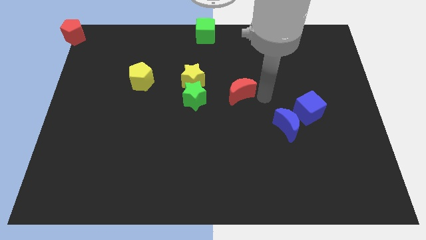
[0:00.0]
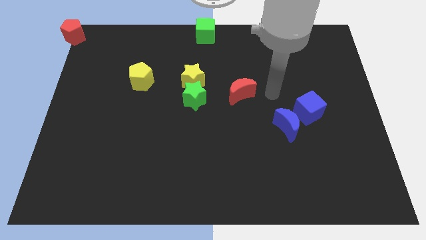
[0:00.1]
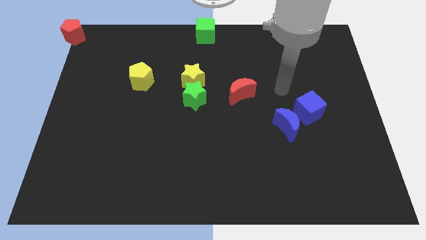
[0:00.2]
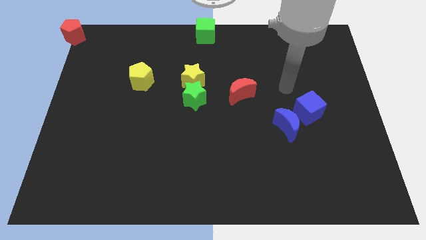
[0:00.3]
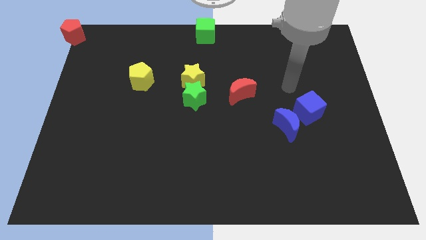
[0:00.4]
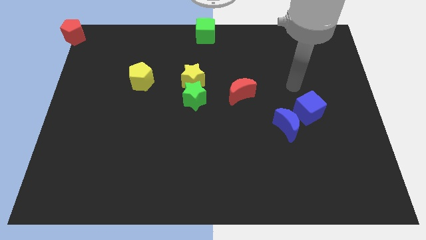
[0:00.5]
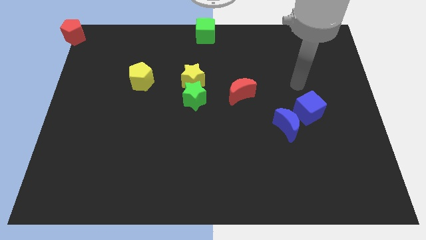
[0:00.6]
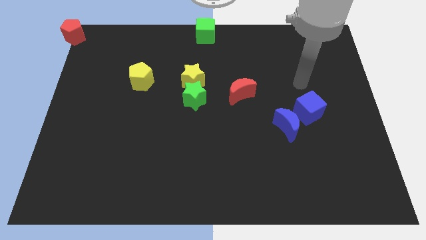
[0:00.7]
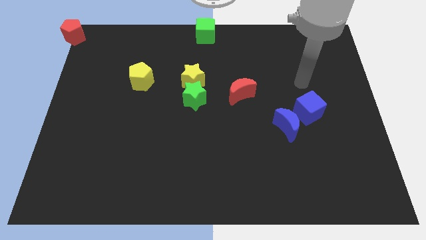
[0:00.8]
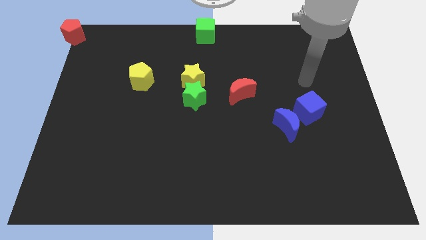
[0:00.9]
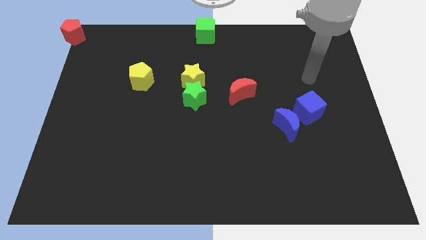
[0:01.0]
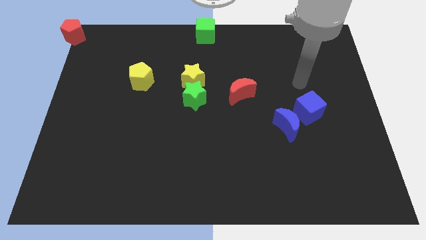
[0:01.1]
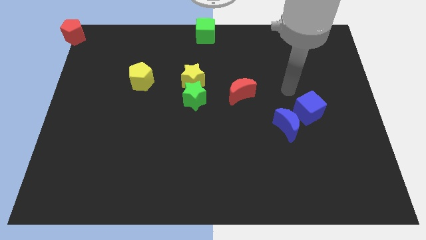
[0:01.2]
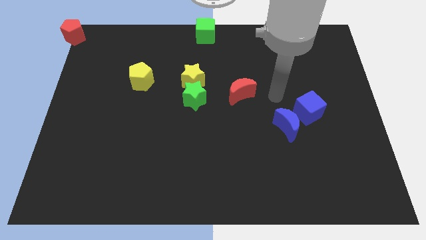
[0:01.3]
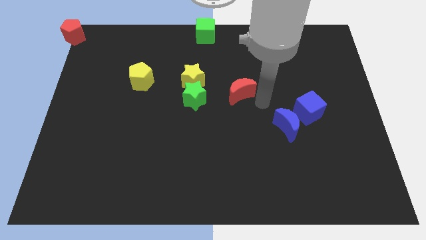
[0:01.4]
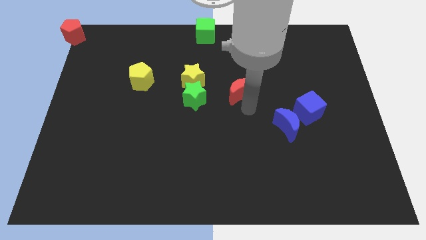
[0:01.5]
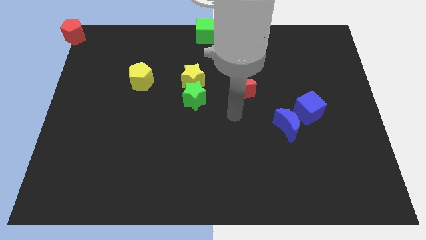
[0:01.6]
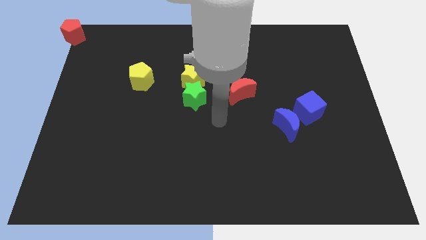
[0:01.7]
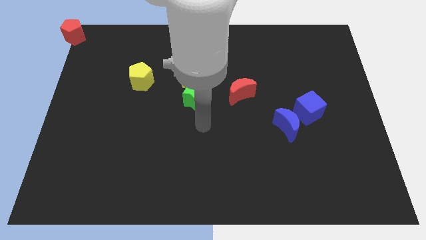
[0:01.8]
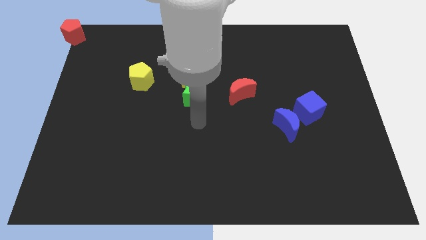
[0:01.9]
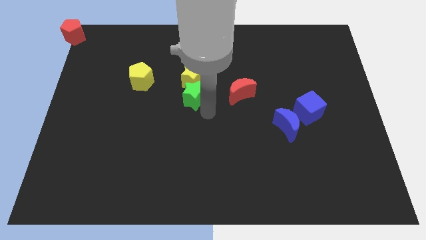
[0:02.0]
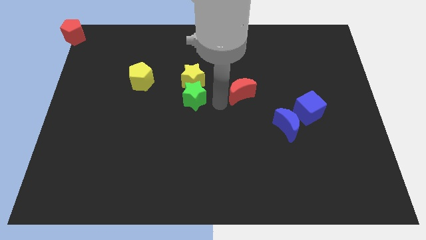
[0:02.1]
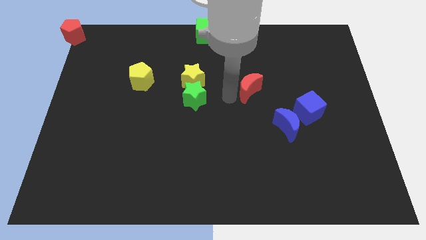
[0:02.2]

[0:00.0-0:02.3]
point the arm in between the green star and the red moon

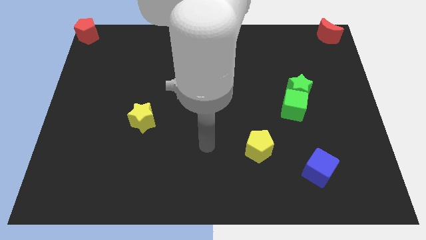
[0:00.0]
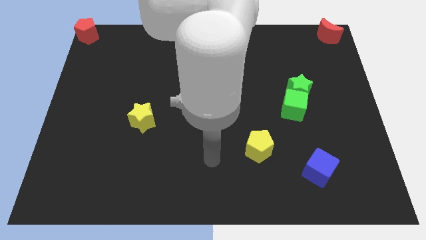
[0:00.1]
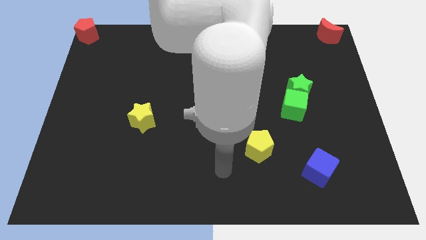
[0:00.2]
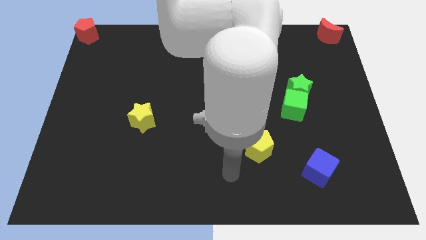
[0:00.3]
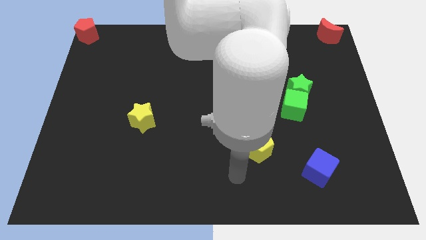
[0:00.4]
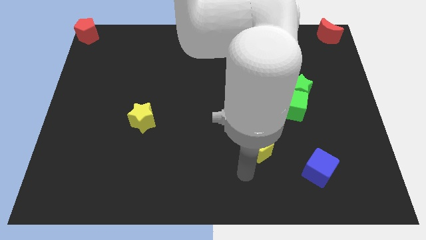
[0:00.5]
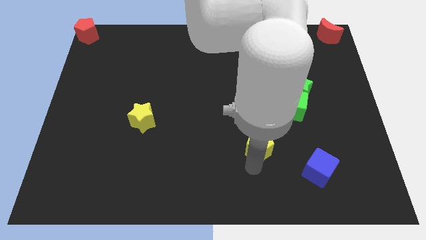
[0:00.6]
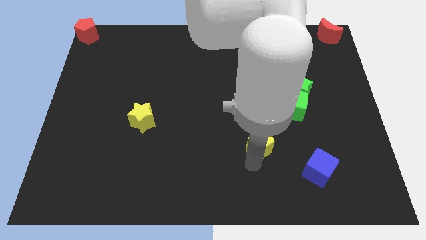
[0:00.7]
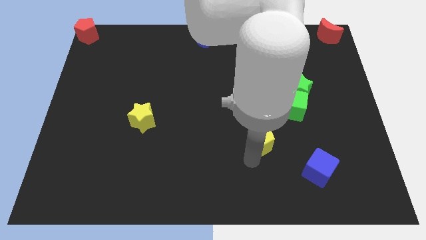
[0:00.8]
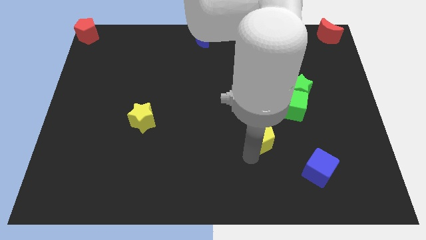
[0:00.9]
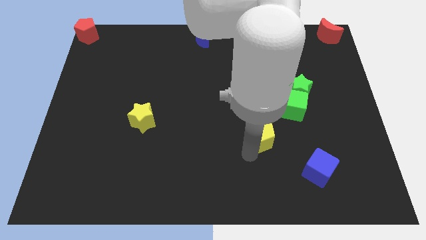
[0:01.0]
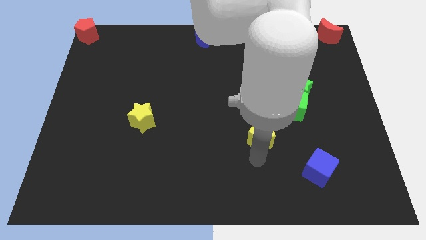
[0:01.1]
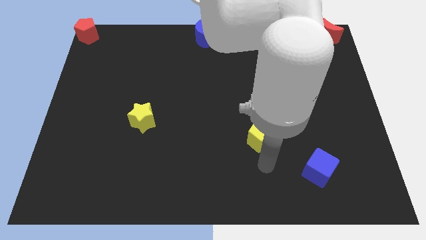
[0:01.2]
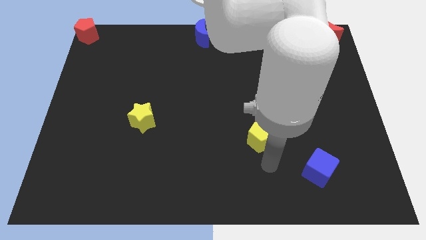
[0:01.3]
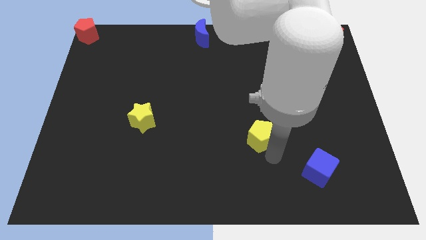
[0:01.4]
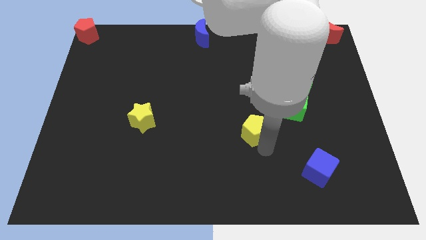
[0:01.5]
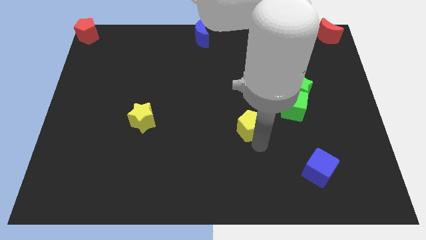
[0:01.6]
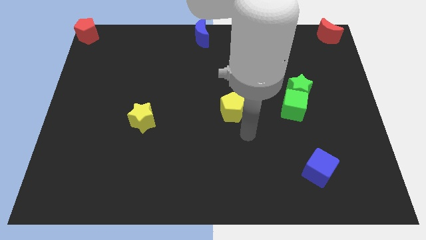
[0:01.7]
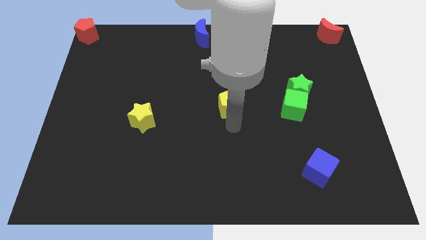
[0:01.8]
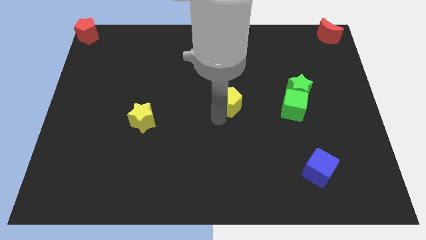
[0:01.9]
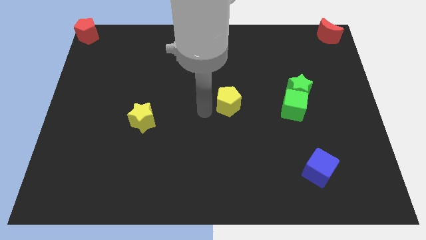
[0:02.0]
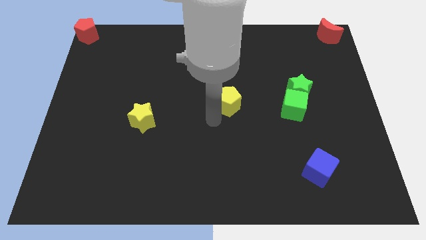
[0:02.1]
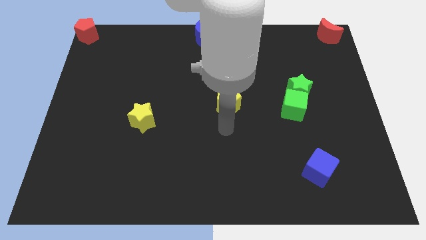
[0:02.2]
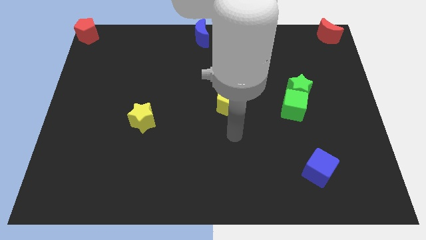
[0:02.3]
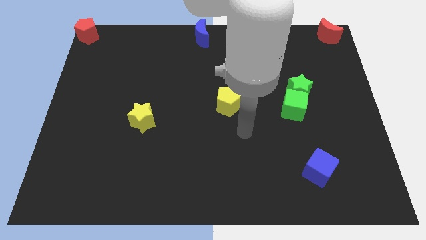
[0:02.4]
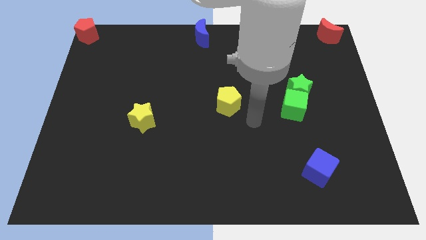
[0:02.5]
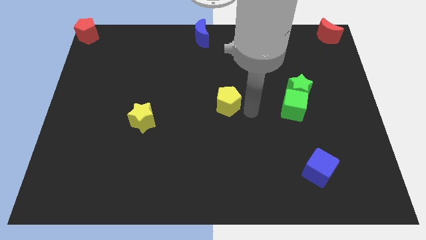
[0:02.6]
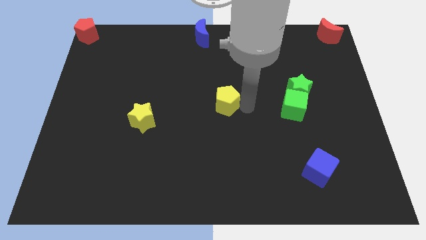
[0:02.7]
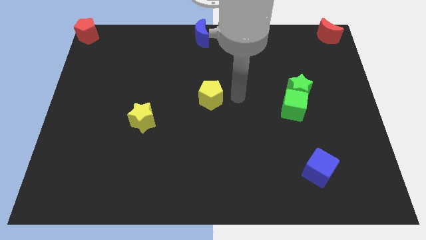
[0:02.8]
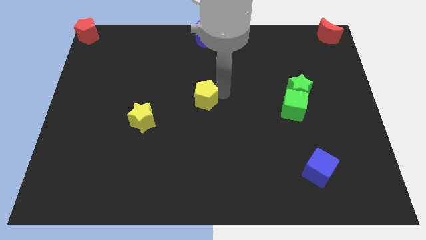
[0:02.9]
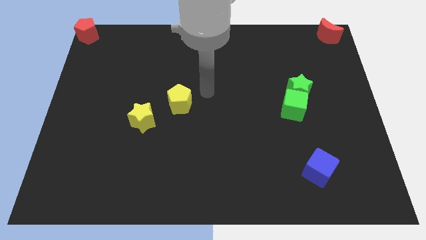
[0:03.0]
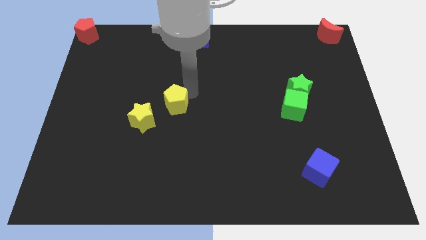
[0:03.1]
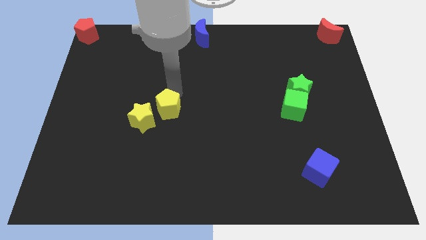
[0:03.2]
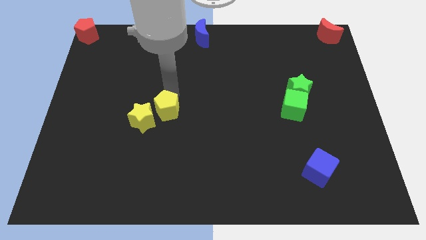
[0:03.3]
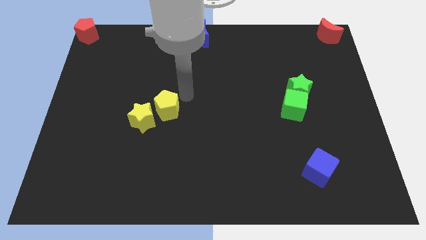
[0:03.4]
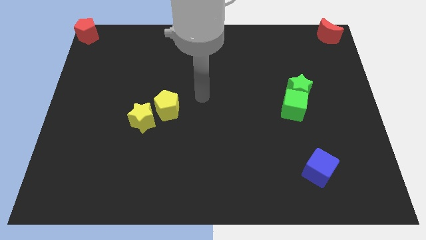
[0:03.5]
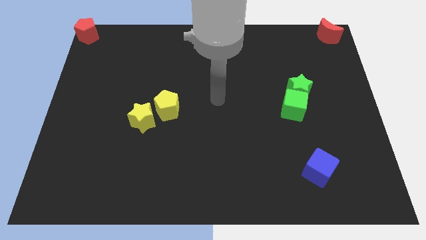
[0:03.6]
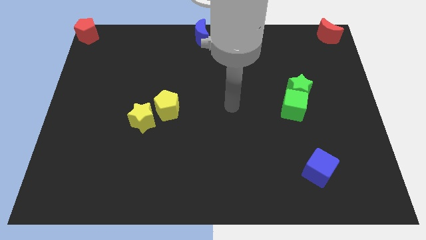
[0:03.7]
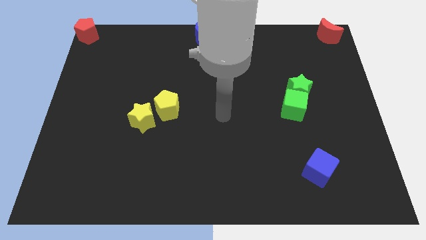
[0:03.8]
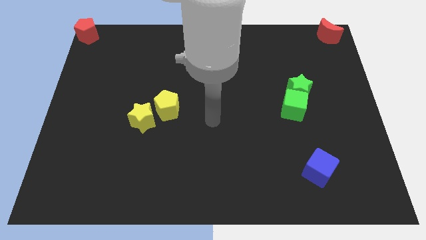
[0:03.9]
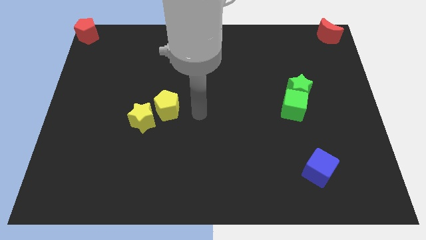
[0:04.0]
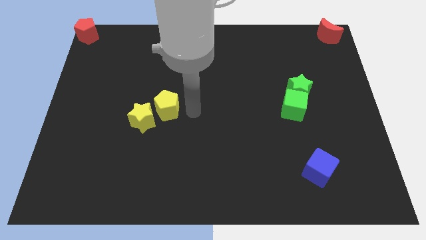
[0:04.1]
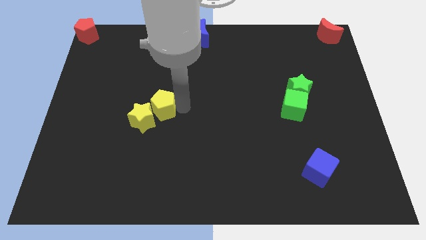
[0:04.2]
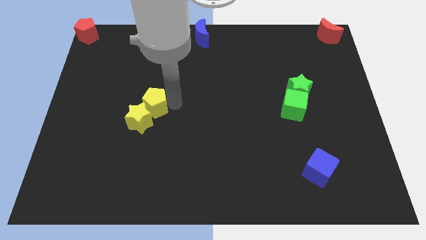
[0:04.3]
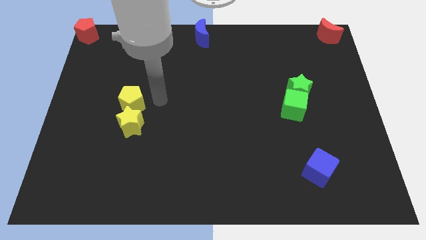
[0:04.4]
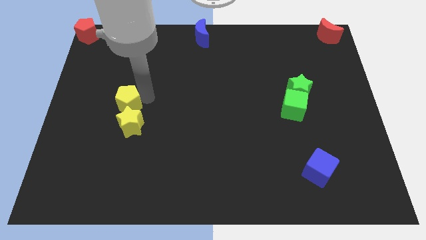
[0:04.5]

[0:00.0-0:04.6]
push yellow pentagon above yellow star

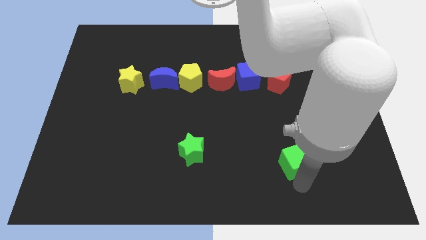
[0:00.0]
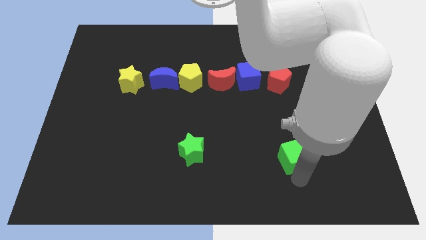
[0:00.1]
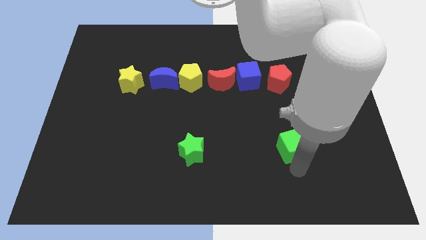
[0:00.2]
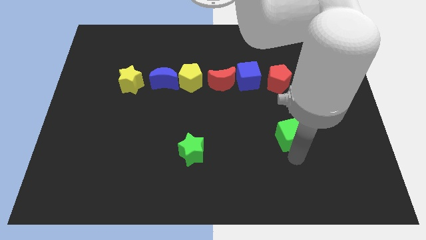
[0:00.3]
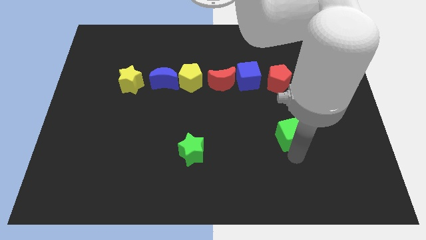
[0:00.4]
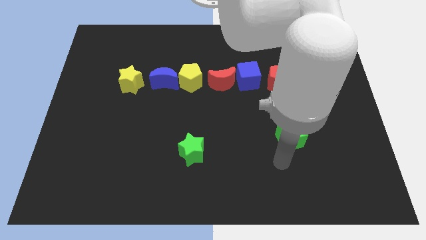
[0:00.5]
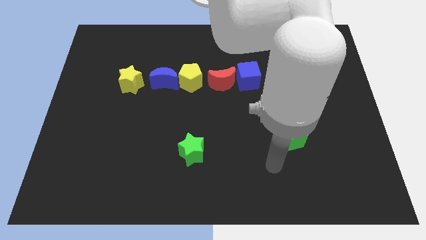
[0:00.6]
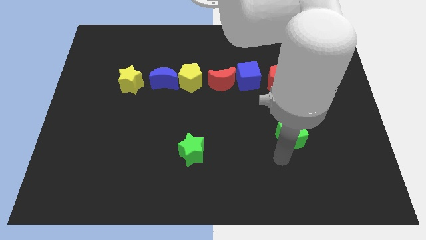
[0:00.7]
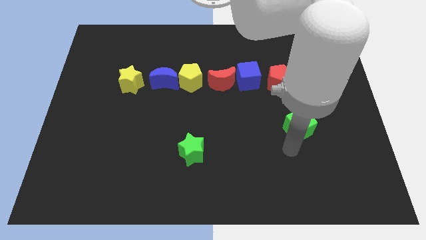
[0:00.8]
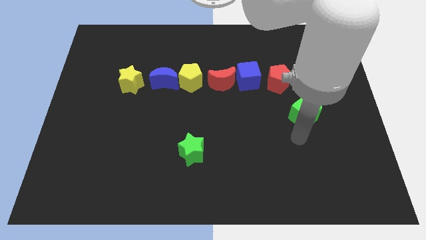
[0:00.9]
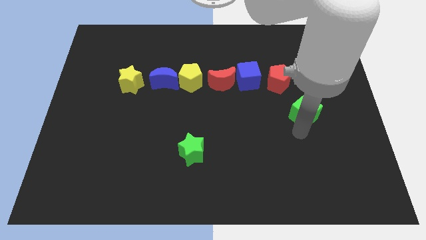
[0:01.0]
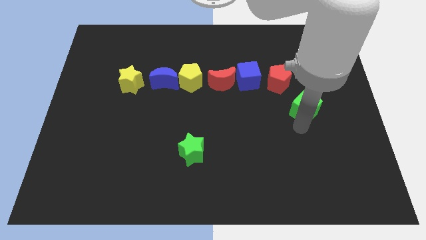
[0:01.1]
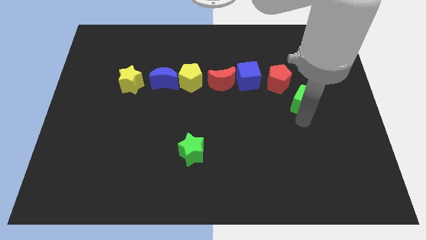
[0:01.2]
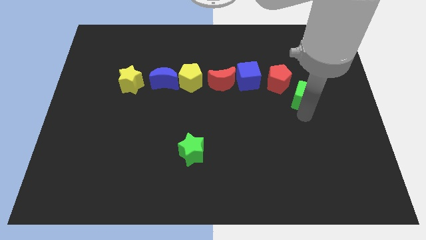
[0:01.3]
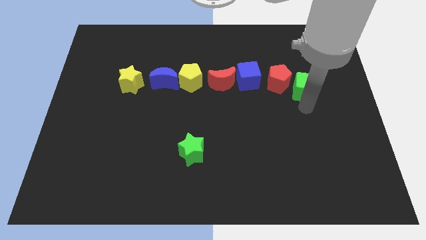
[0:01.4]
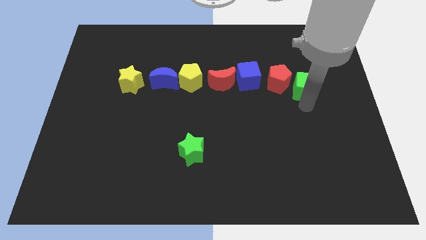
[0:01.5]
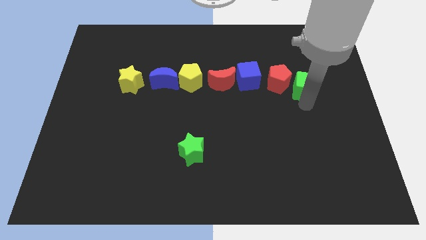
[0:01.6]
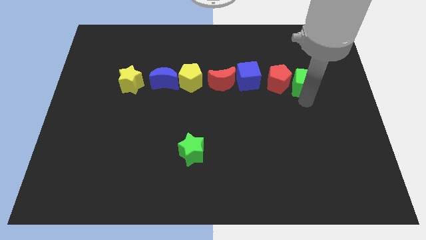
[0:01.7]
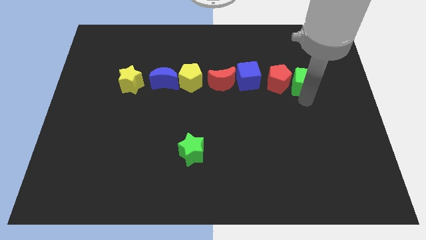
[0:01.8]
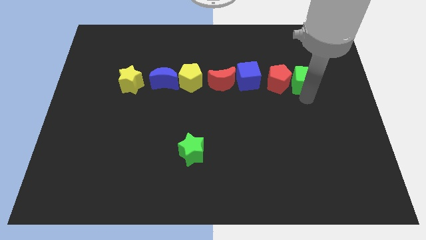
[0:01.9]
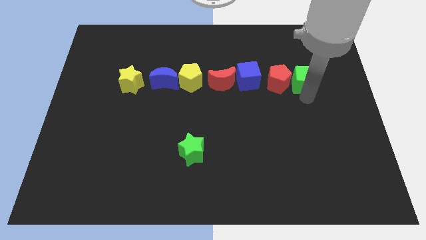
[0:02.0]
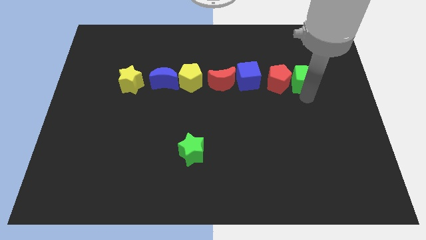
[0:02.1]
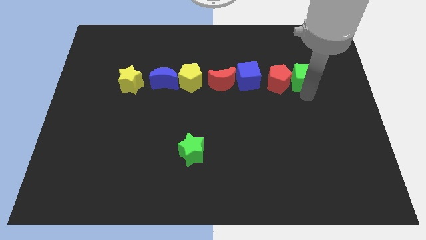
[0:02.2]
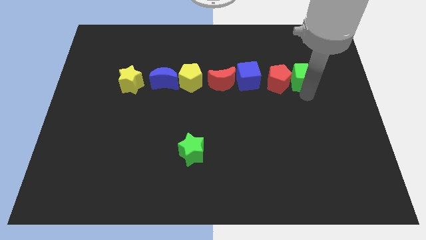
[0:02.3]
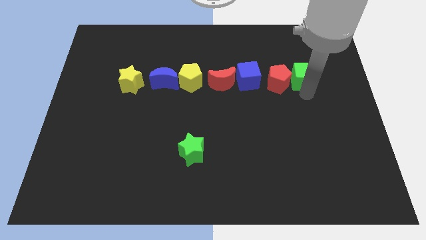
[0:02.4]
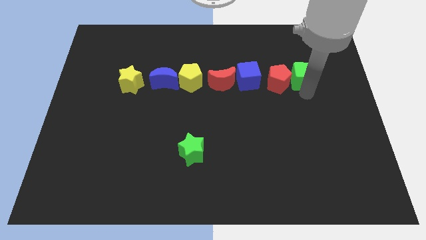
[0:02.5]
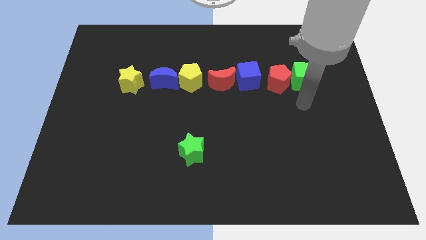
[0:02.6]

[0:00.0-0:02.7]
move the green cube towards the right of red pentagon
